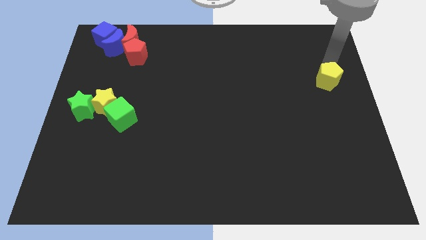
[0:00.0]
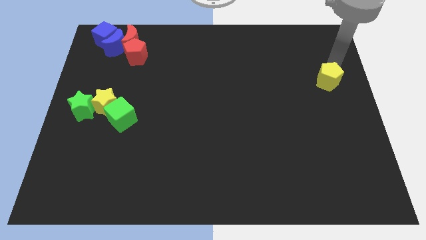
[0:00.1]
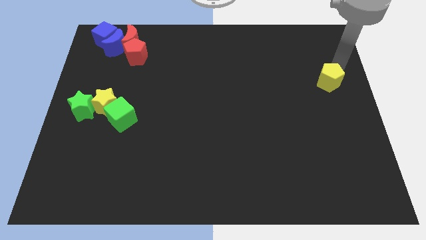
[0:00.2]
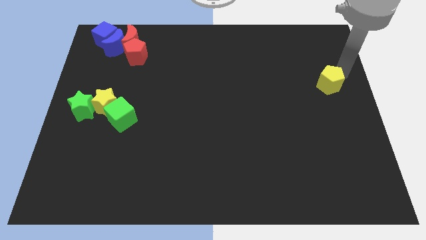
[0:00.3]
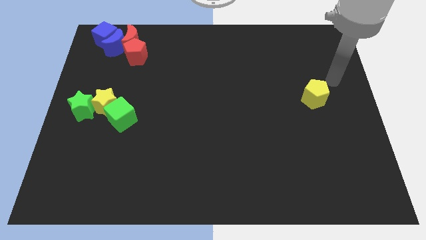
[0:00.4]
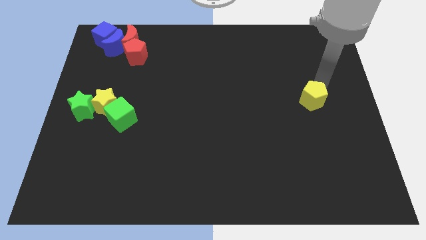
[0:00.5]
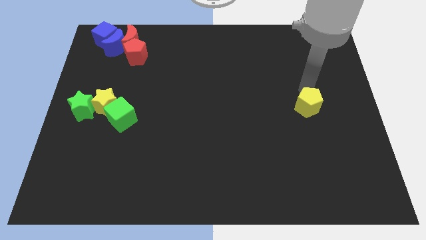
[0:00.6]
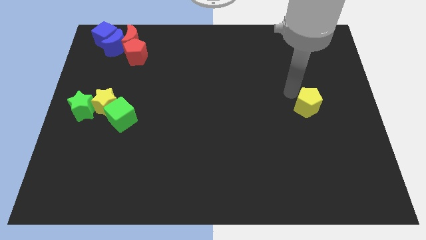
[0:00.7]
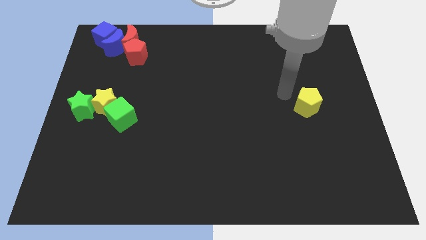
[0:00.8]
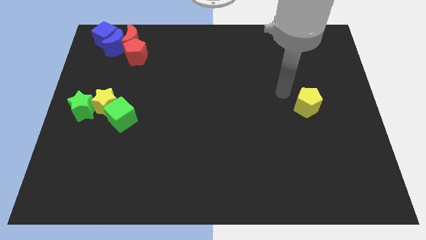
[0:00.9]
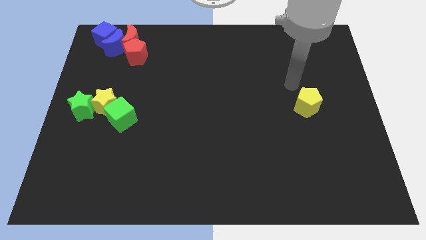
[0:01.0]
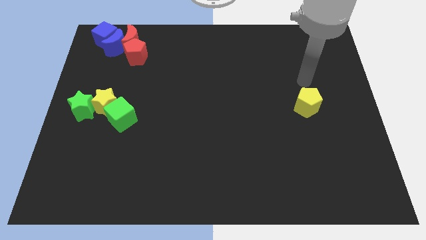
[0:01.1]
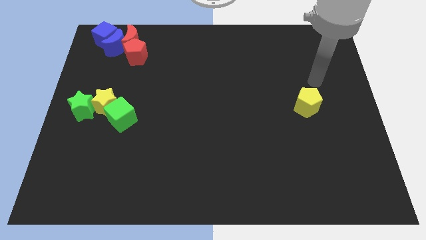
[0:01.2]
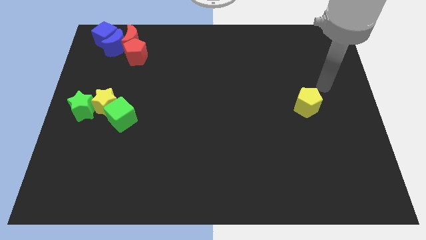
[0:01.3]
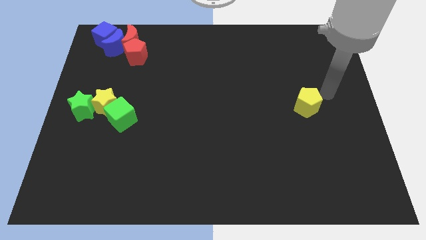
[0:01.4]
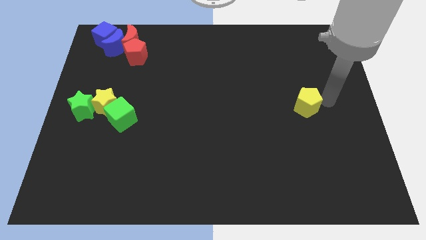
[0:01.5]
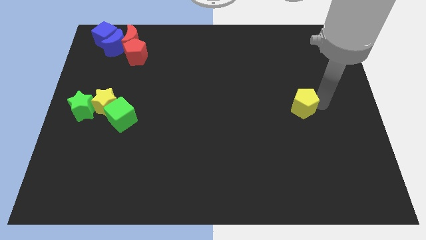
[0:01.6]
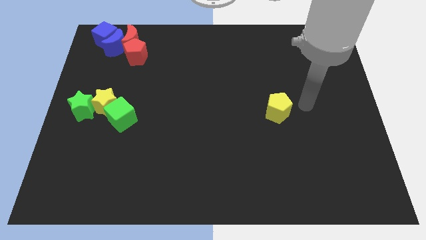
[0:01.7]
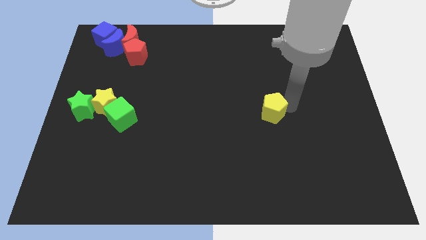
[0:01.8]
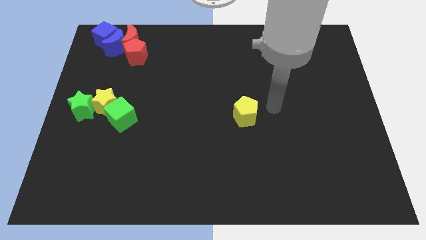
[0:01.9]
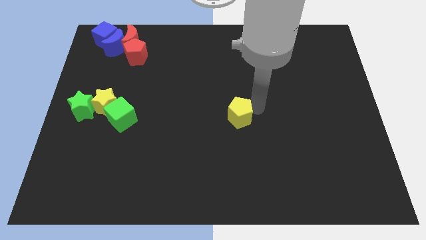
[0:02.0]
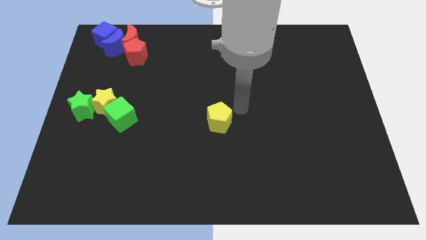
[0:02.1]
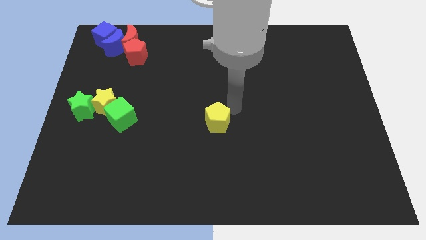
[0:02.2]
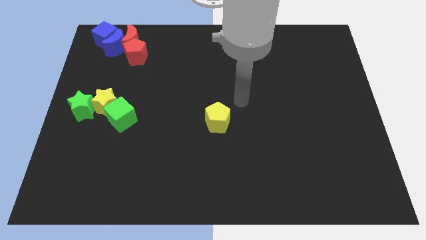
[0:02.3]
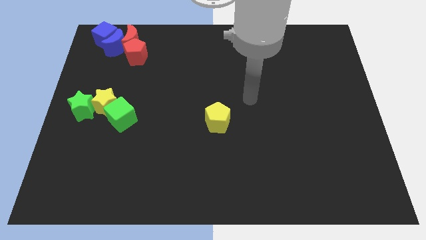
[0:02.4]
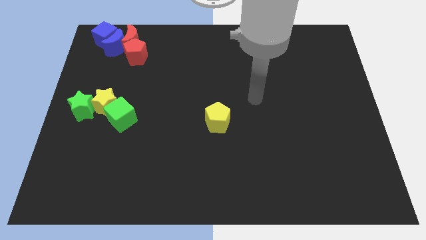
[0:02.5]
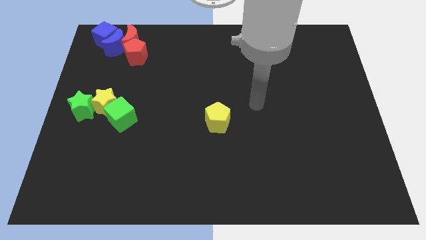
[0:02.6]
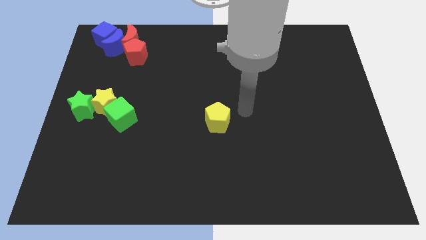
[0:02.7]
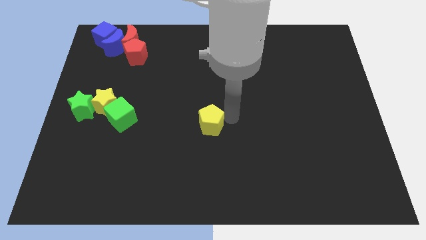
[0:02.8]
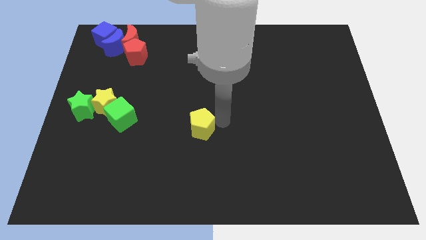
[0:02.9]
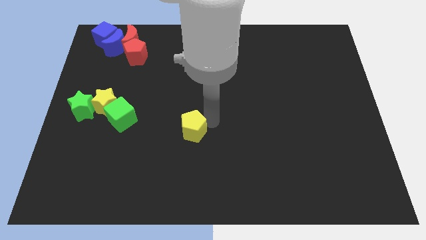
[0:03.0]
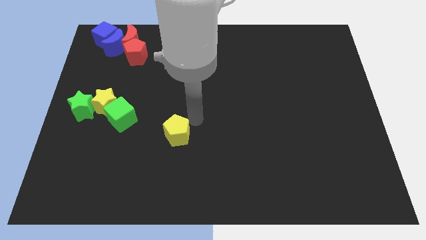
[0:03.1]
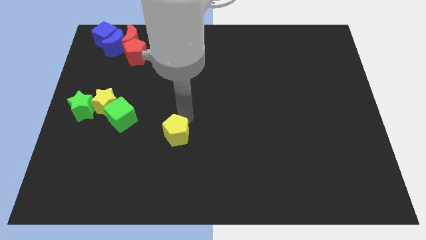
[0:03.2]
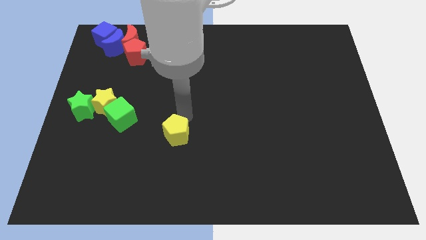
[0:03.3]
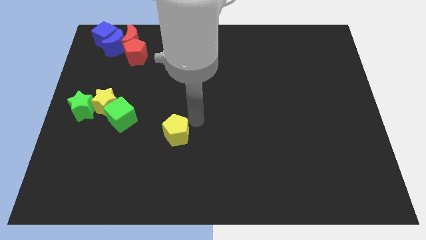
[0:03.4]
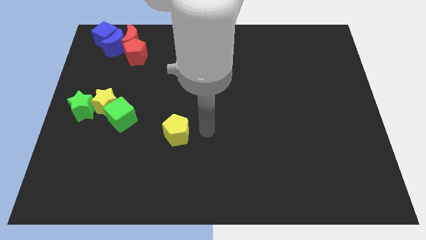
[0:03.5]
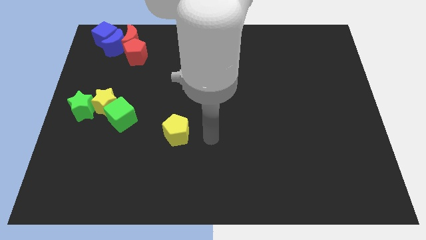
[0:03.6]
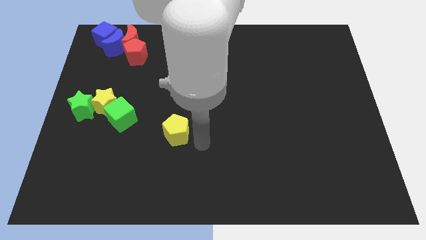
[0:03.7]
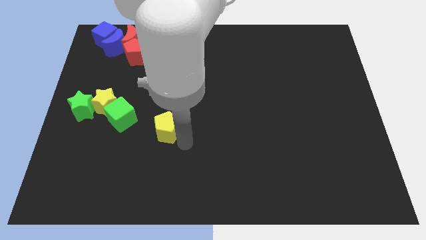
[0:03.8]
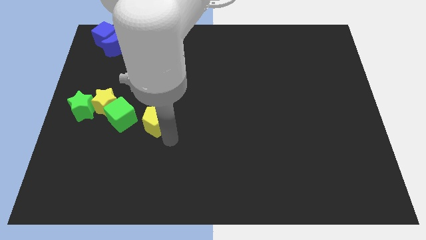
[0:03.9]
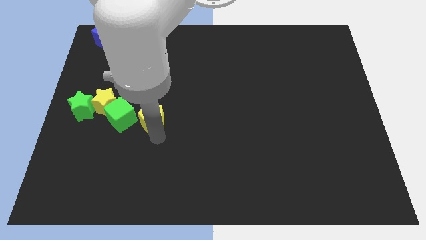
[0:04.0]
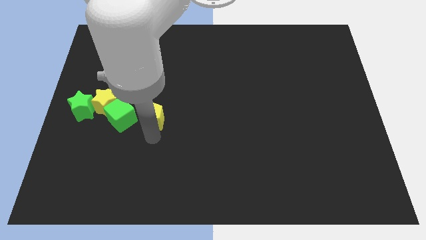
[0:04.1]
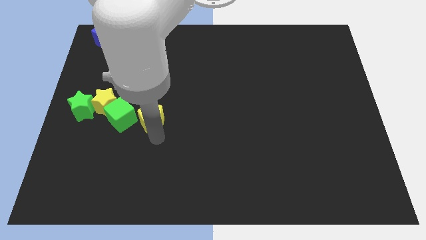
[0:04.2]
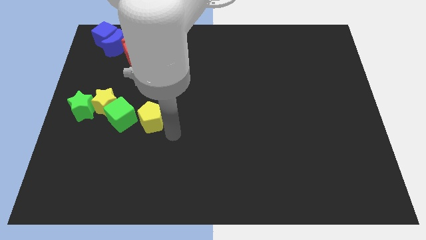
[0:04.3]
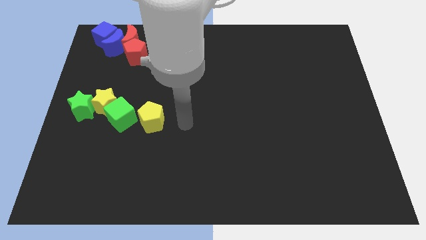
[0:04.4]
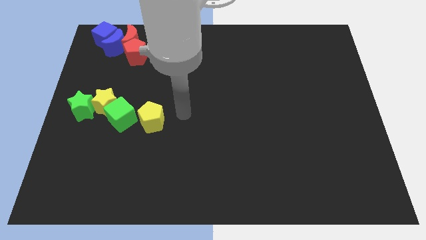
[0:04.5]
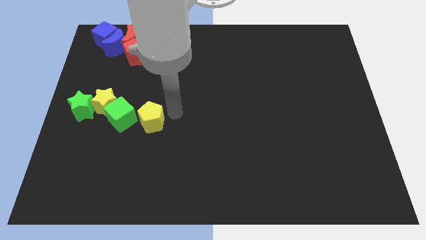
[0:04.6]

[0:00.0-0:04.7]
push the yellow pentagon to the right of the green cube

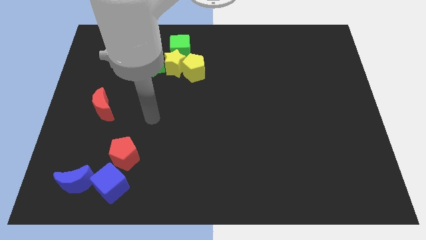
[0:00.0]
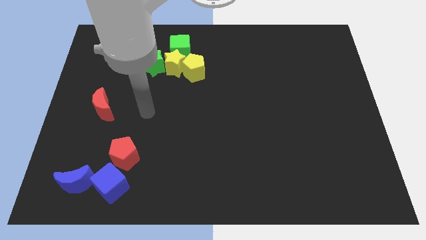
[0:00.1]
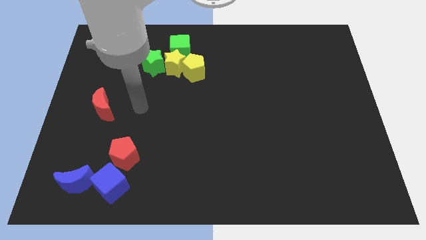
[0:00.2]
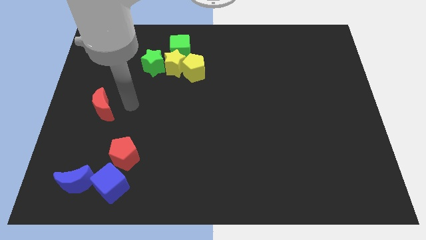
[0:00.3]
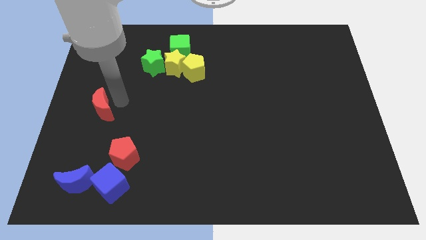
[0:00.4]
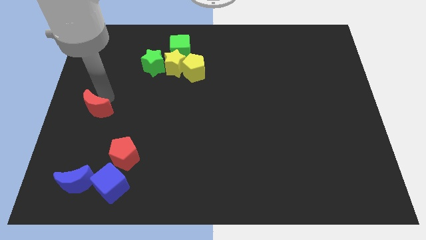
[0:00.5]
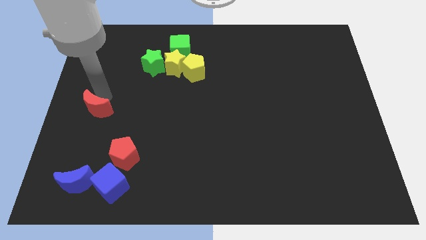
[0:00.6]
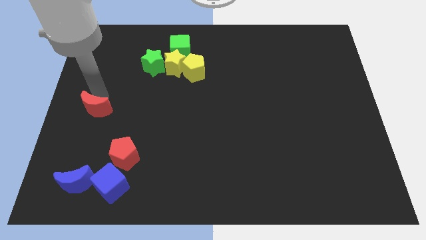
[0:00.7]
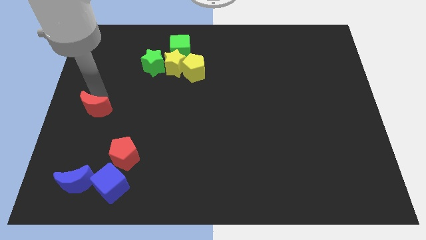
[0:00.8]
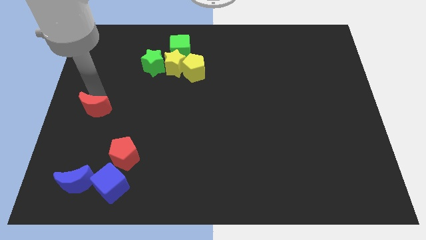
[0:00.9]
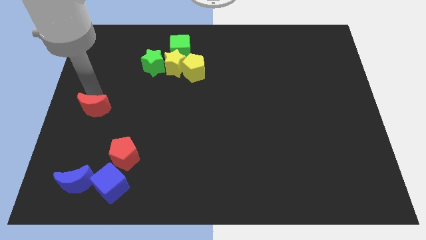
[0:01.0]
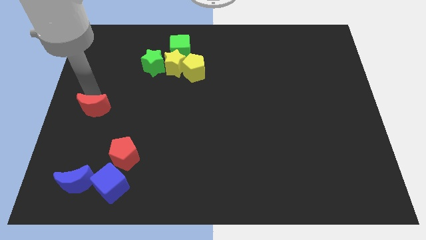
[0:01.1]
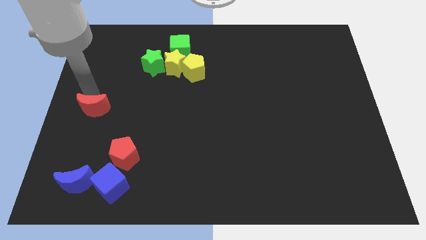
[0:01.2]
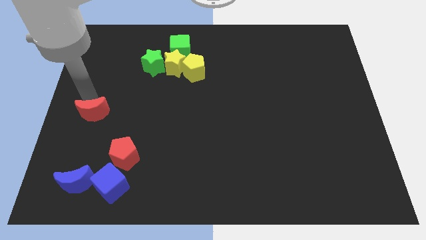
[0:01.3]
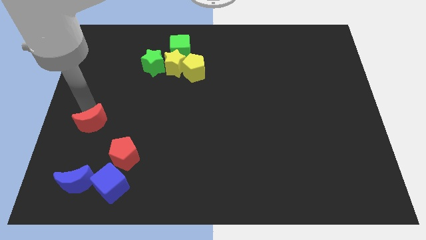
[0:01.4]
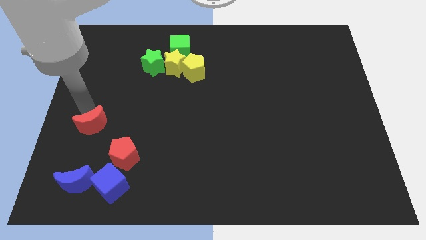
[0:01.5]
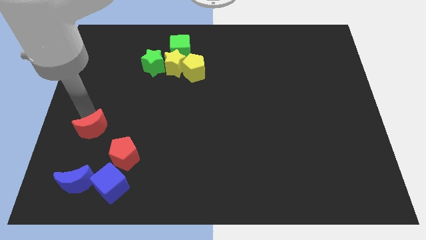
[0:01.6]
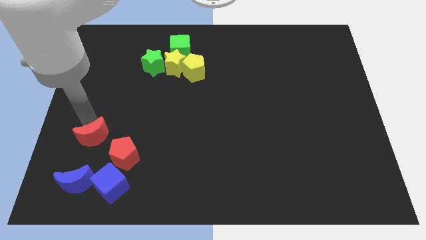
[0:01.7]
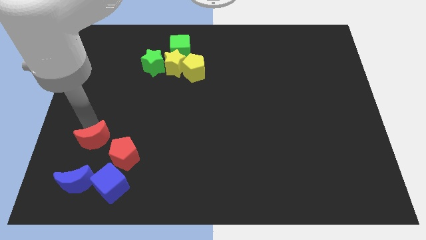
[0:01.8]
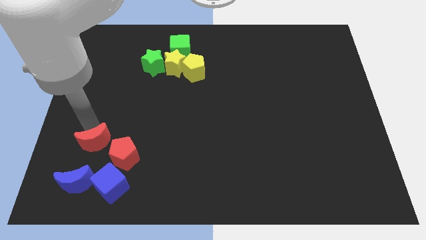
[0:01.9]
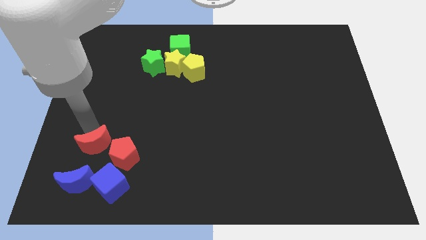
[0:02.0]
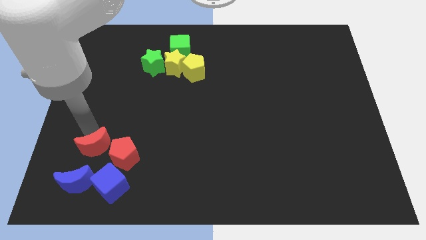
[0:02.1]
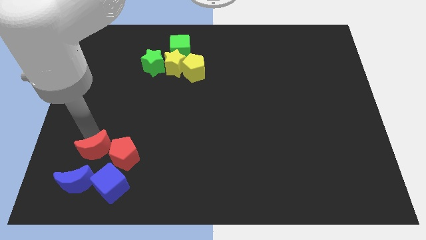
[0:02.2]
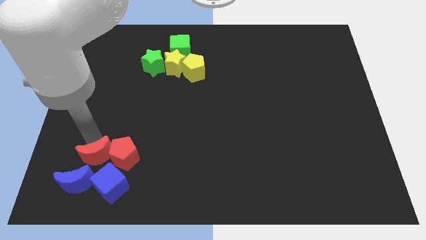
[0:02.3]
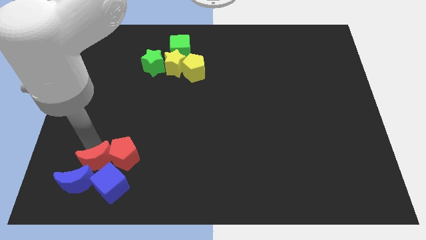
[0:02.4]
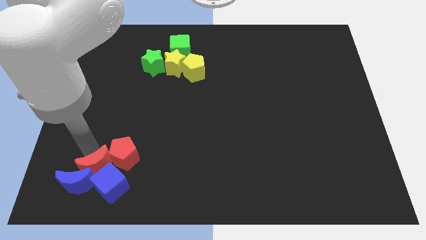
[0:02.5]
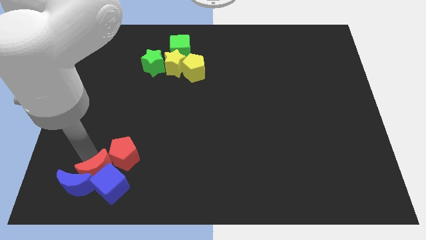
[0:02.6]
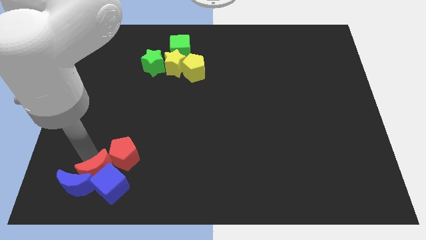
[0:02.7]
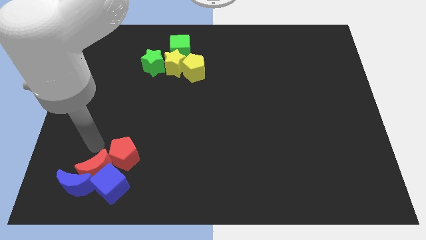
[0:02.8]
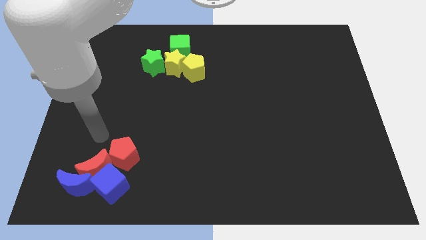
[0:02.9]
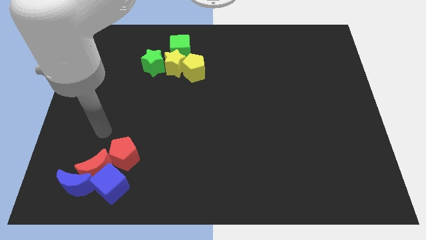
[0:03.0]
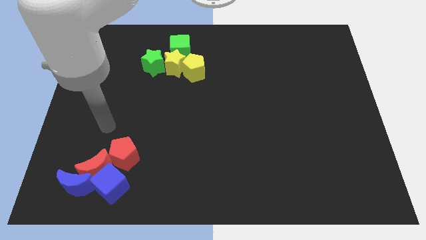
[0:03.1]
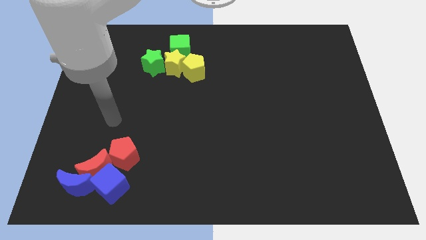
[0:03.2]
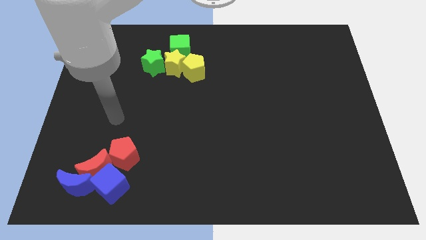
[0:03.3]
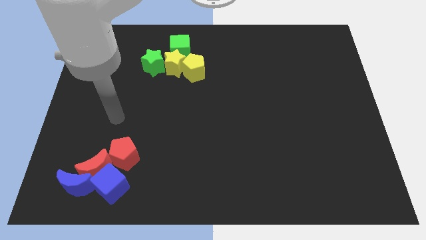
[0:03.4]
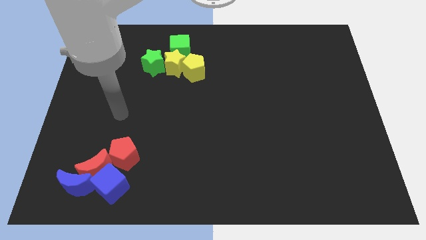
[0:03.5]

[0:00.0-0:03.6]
place red moon to the top of blue moon

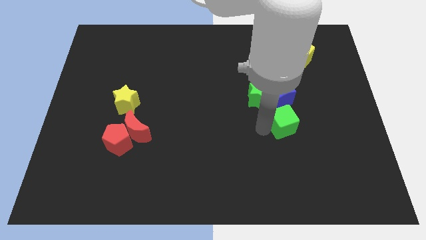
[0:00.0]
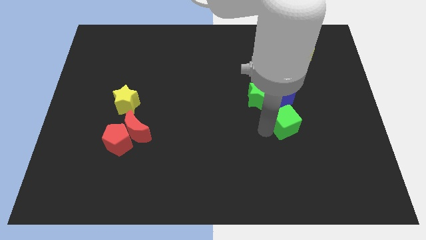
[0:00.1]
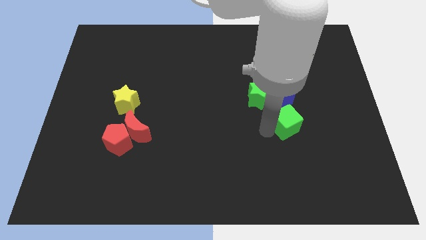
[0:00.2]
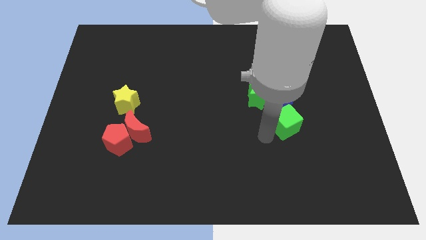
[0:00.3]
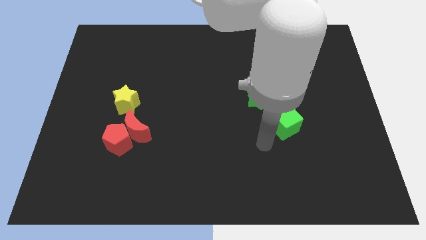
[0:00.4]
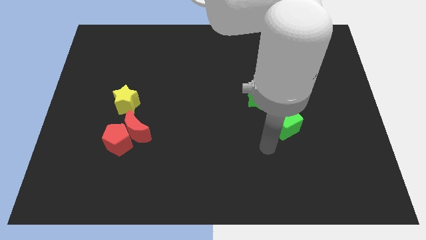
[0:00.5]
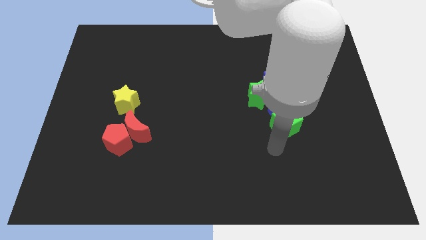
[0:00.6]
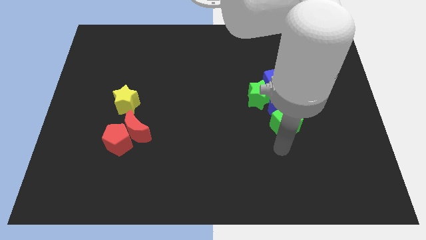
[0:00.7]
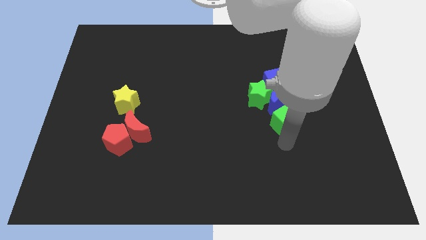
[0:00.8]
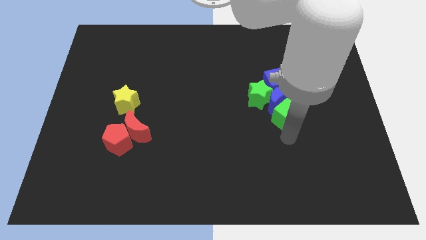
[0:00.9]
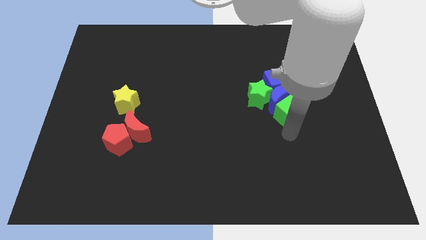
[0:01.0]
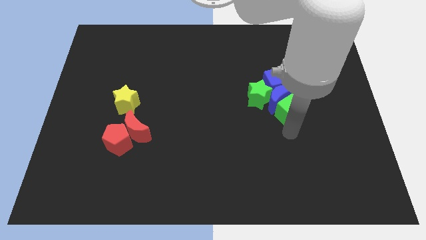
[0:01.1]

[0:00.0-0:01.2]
push the green cube into the blue moon
